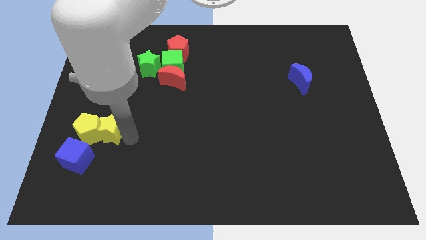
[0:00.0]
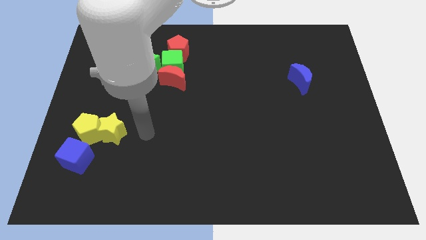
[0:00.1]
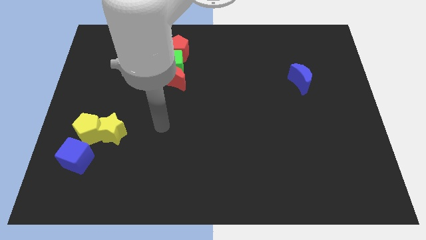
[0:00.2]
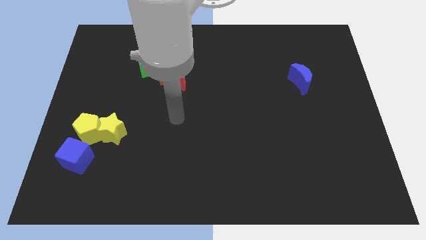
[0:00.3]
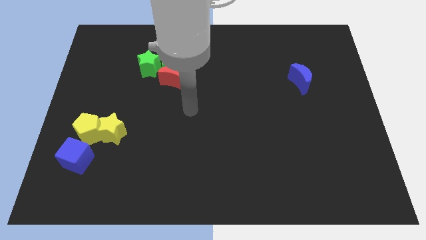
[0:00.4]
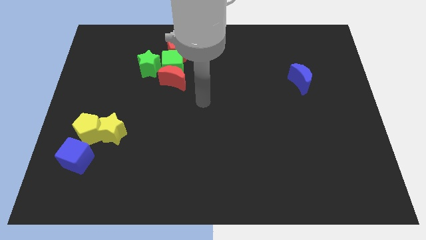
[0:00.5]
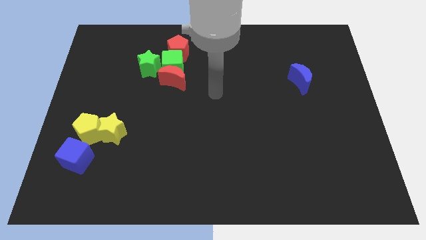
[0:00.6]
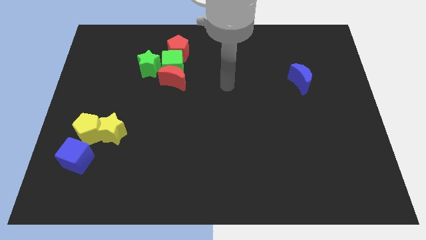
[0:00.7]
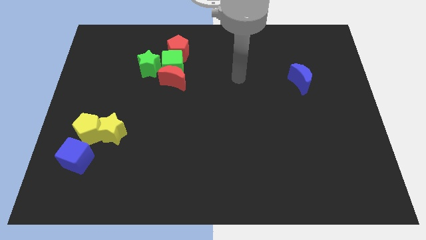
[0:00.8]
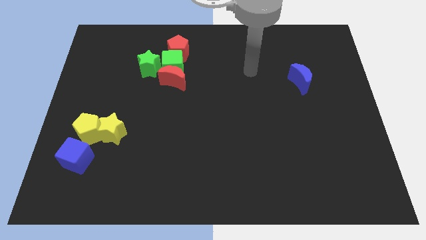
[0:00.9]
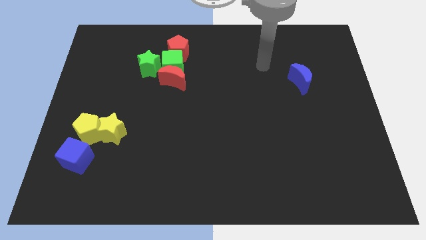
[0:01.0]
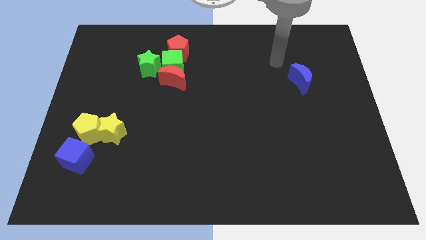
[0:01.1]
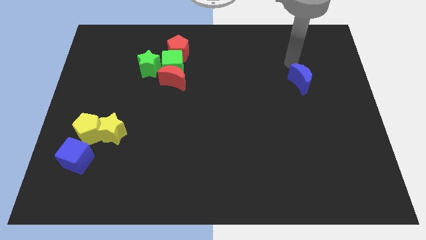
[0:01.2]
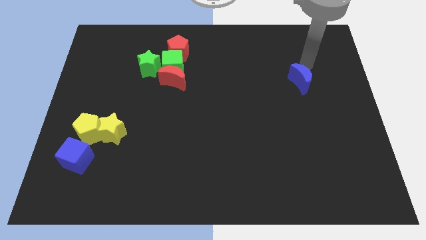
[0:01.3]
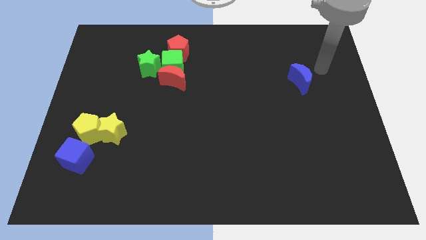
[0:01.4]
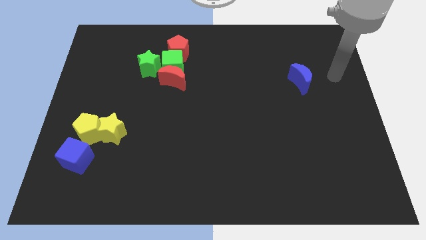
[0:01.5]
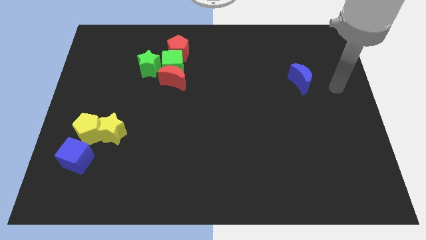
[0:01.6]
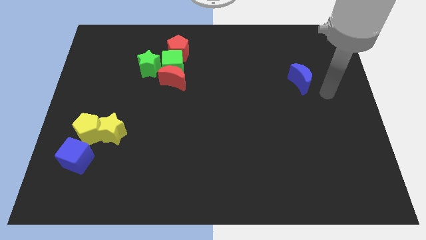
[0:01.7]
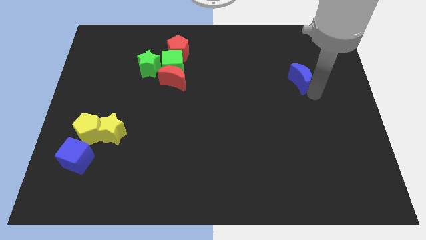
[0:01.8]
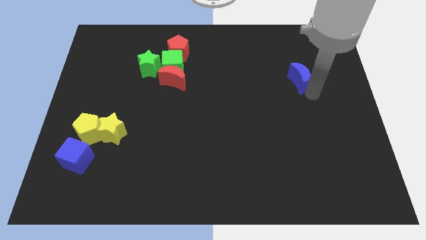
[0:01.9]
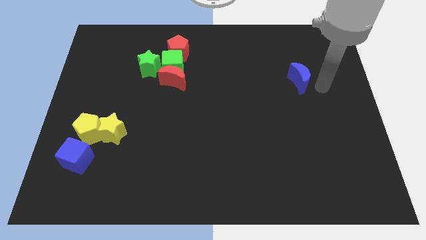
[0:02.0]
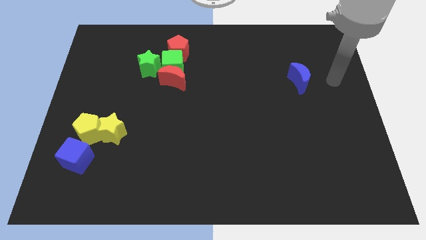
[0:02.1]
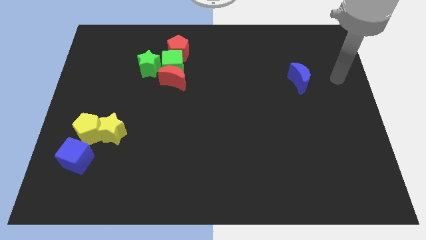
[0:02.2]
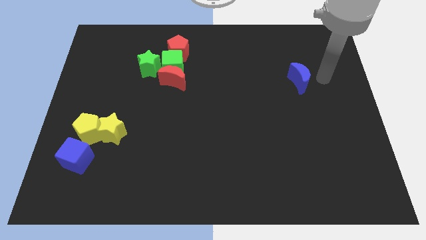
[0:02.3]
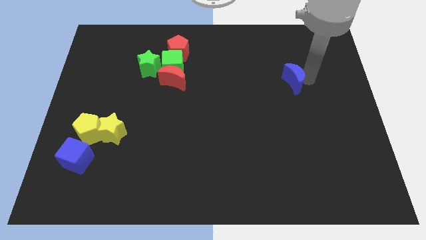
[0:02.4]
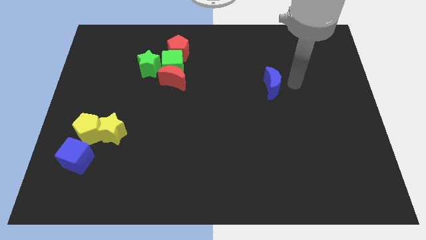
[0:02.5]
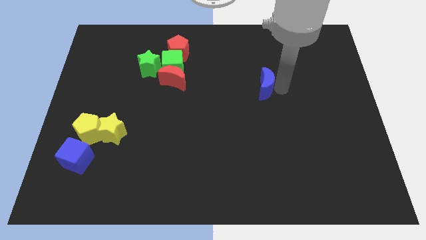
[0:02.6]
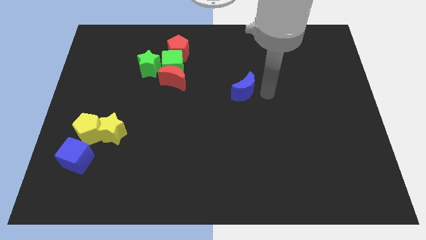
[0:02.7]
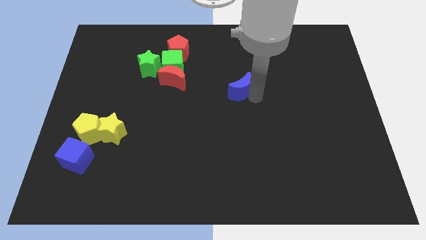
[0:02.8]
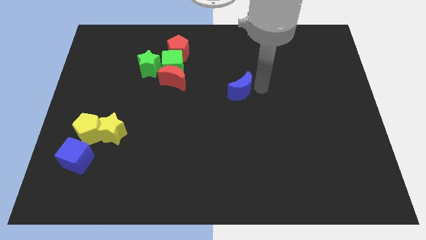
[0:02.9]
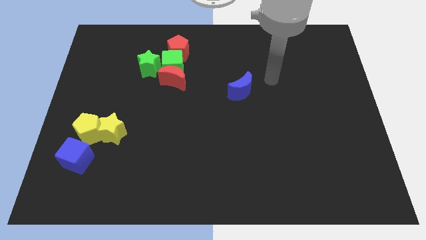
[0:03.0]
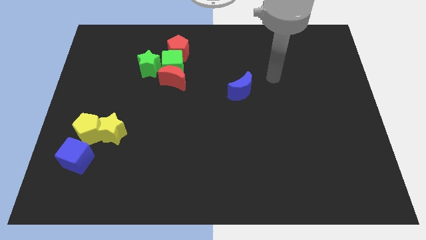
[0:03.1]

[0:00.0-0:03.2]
push the blue moon to the right side of the red moon

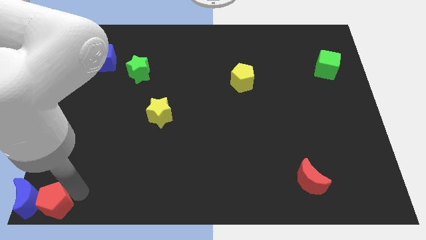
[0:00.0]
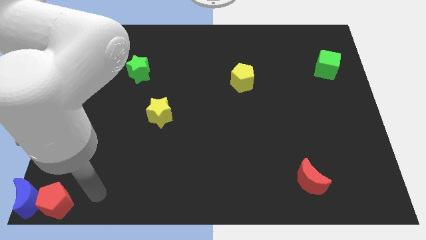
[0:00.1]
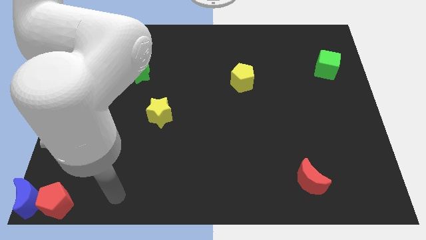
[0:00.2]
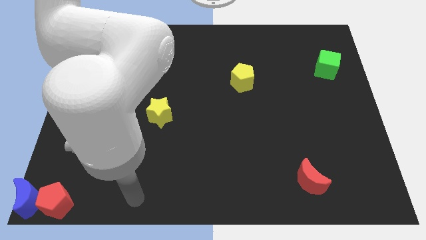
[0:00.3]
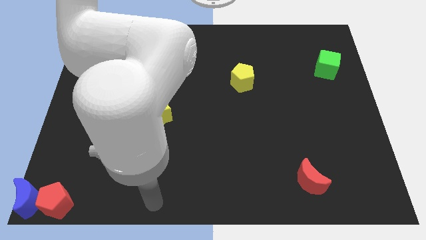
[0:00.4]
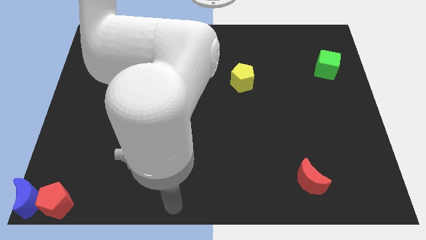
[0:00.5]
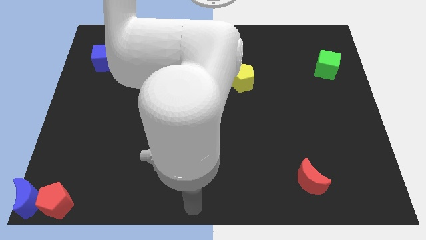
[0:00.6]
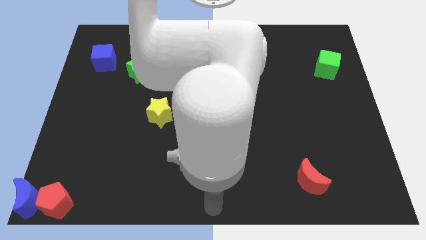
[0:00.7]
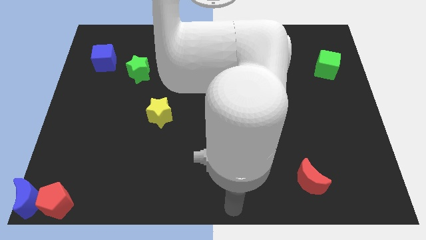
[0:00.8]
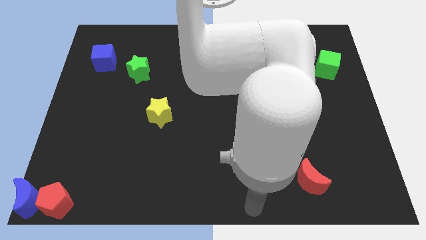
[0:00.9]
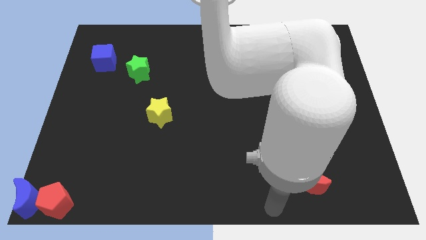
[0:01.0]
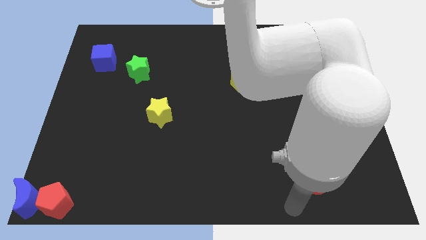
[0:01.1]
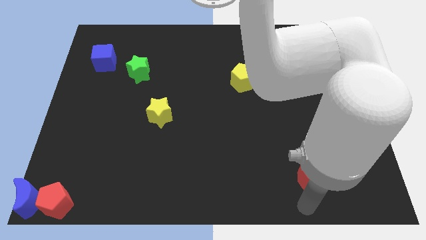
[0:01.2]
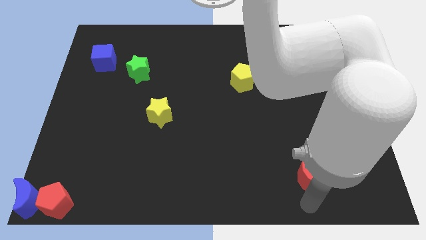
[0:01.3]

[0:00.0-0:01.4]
move your arm away from red pentagon

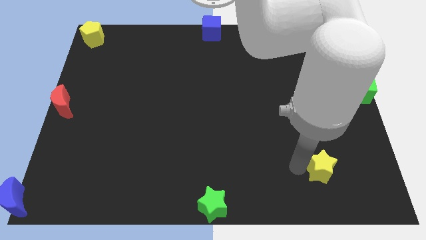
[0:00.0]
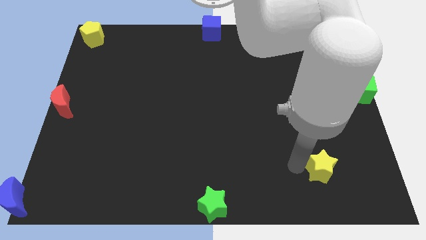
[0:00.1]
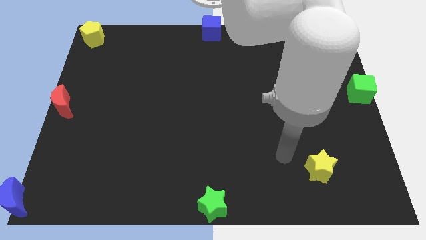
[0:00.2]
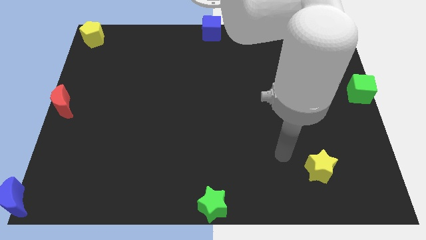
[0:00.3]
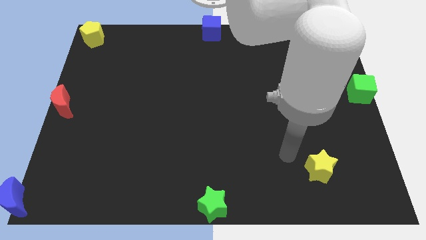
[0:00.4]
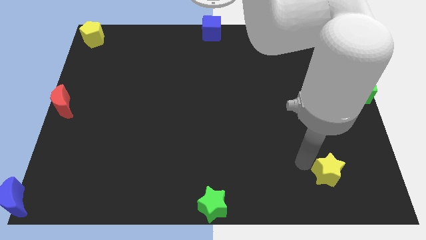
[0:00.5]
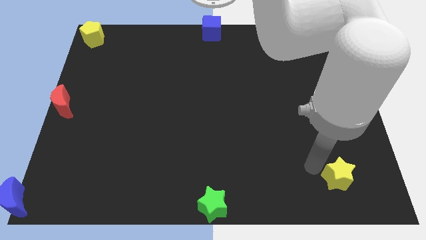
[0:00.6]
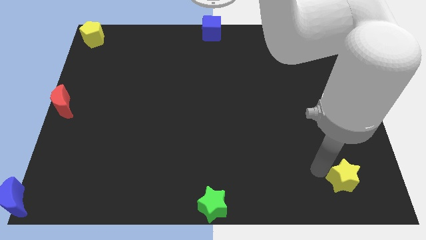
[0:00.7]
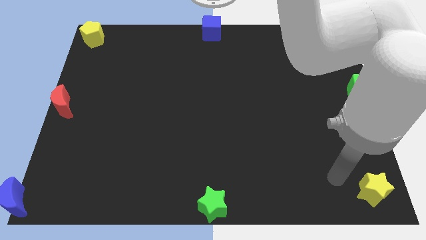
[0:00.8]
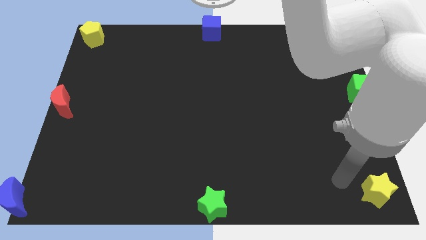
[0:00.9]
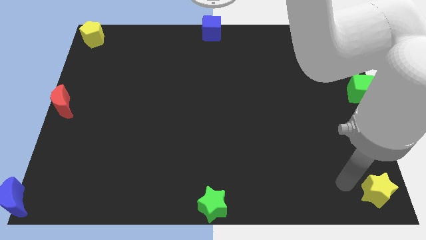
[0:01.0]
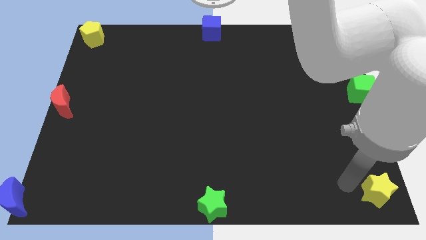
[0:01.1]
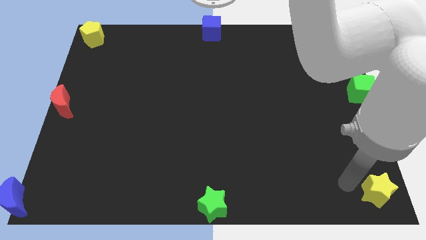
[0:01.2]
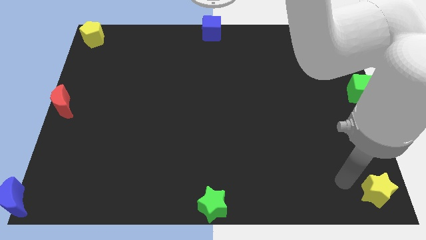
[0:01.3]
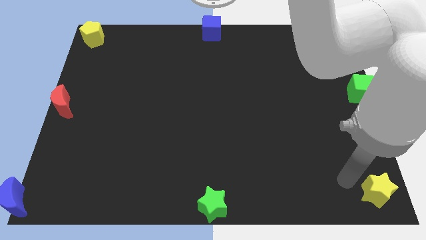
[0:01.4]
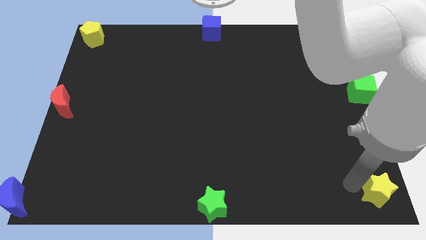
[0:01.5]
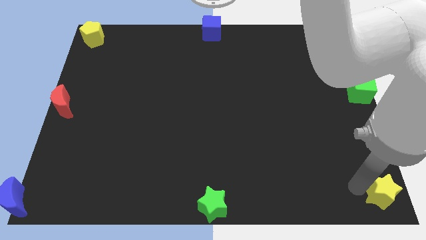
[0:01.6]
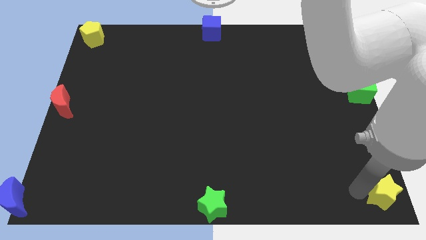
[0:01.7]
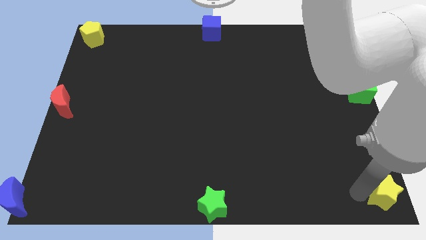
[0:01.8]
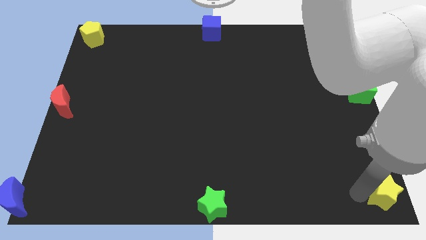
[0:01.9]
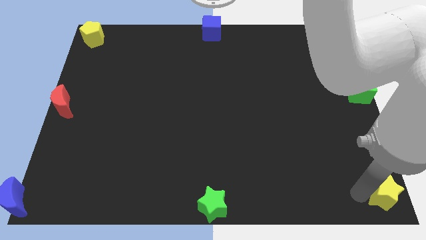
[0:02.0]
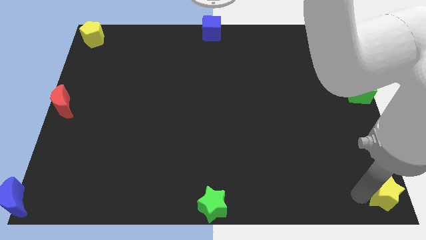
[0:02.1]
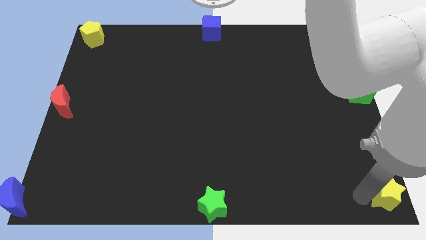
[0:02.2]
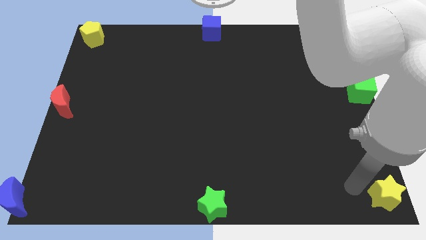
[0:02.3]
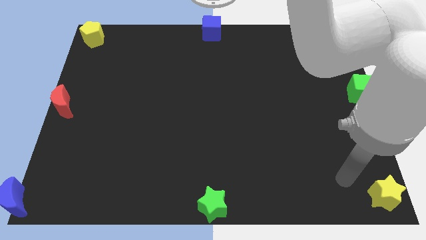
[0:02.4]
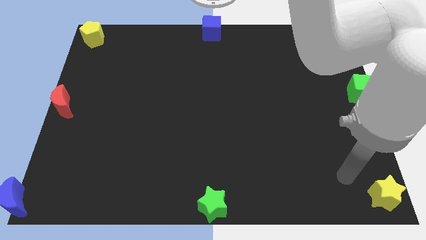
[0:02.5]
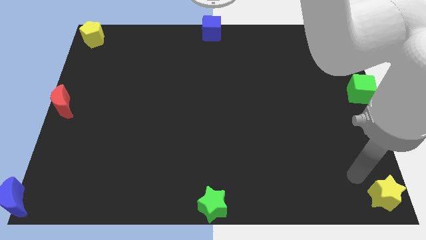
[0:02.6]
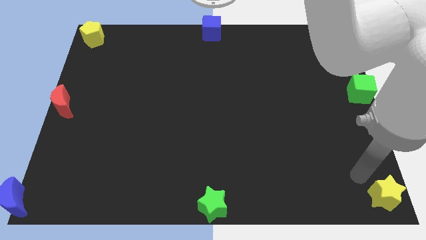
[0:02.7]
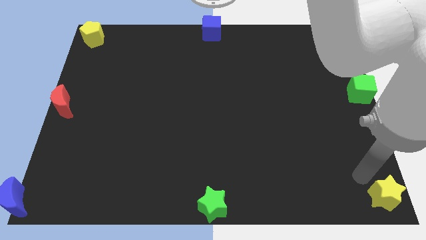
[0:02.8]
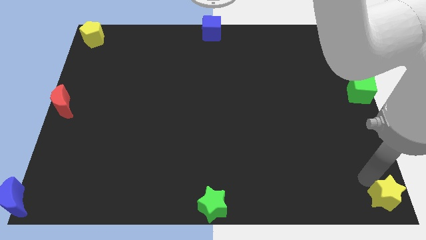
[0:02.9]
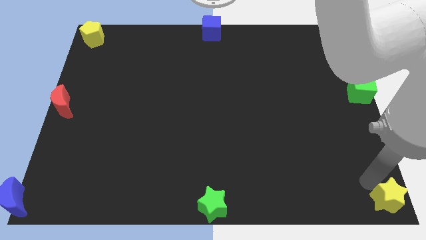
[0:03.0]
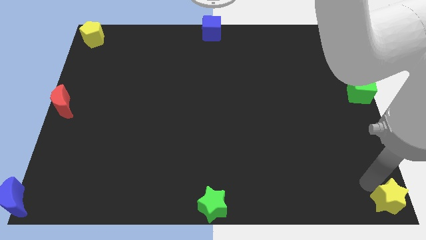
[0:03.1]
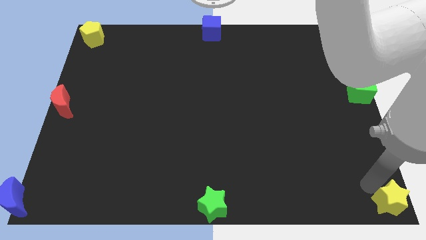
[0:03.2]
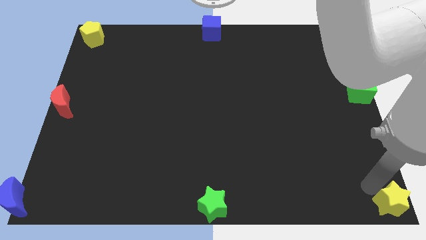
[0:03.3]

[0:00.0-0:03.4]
move the yellow star to the bottom right corner of the board

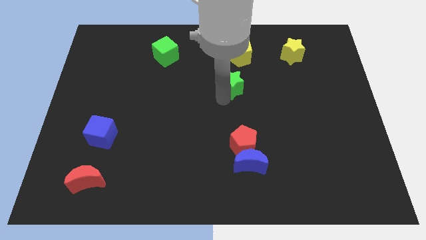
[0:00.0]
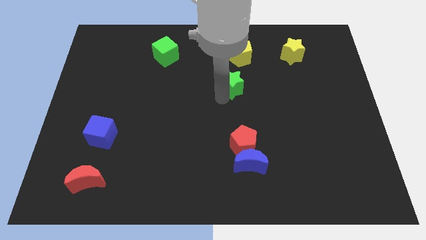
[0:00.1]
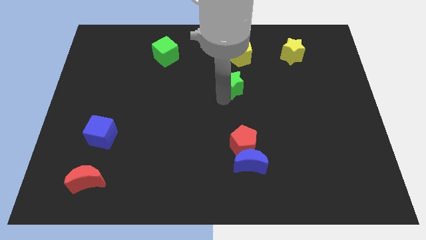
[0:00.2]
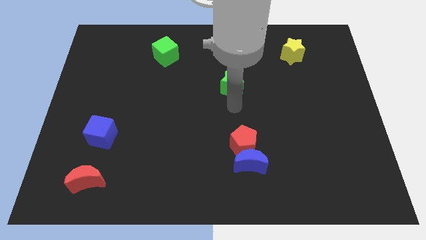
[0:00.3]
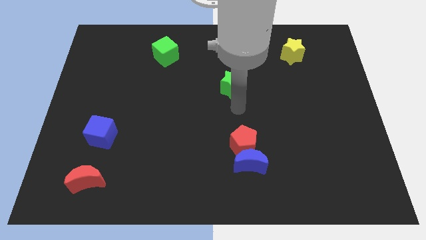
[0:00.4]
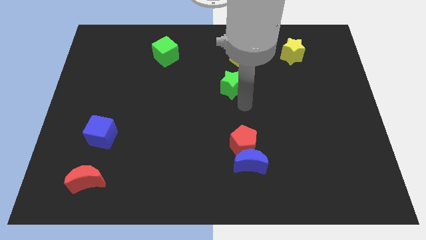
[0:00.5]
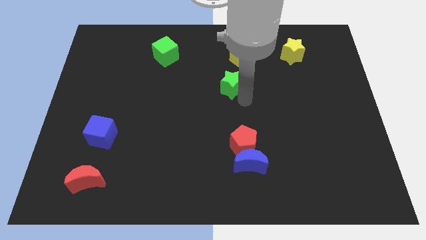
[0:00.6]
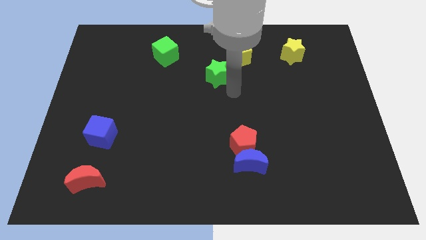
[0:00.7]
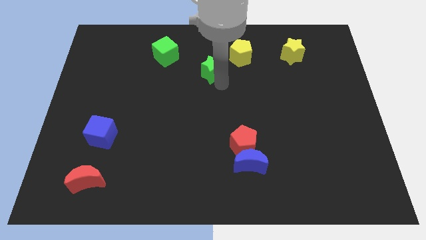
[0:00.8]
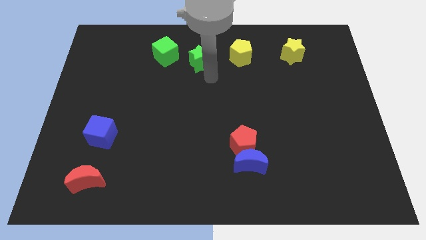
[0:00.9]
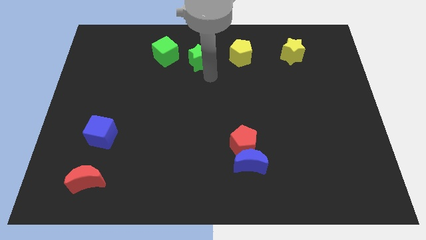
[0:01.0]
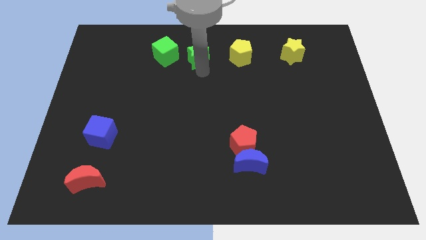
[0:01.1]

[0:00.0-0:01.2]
place the green star in between the green cube and yellow pentagon
